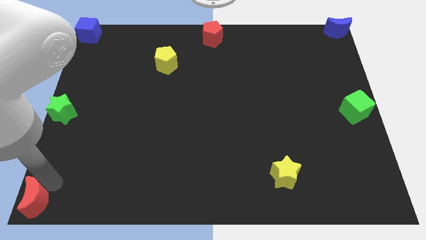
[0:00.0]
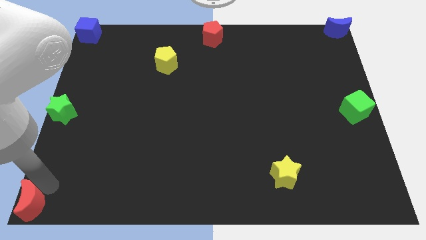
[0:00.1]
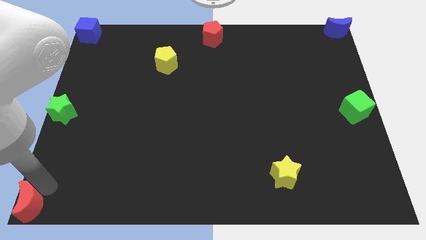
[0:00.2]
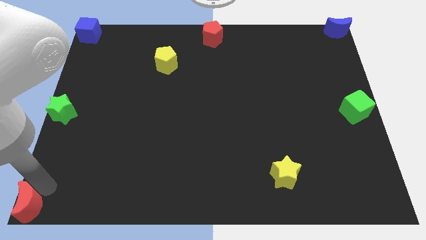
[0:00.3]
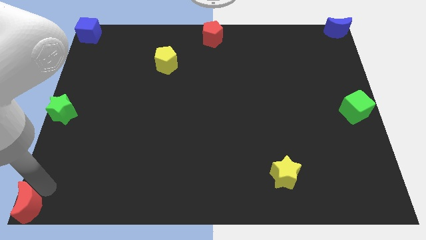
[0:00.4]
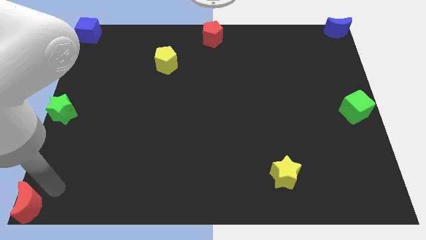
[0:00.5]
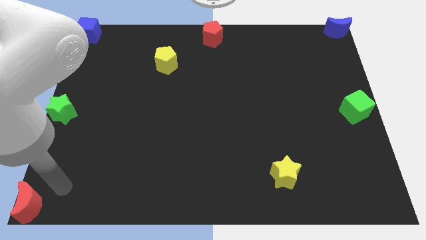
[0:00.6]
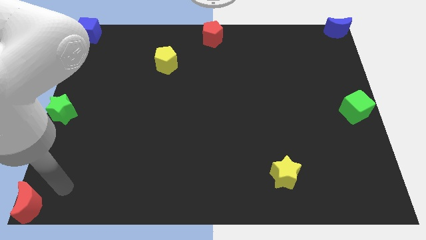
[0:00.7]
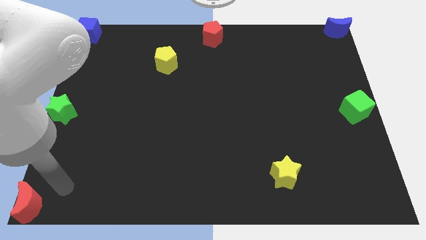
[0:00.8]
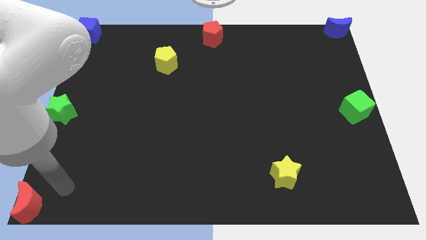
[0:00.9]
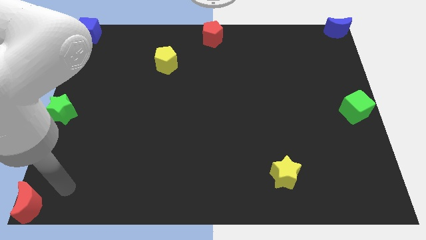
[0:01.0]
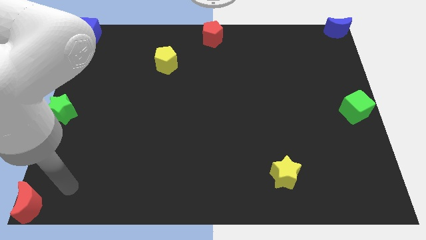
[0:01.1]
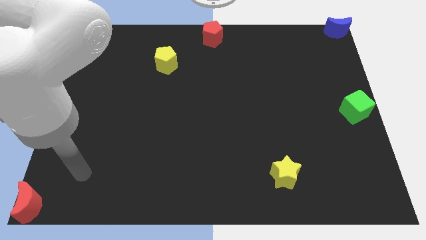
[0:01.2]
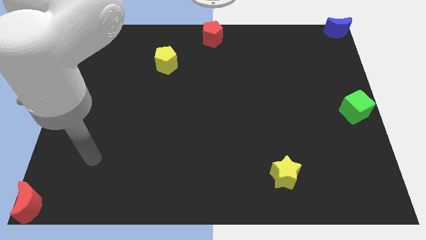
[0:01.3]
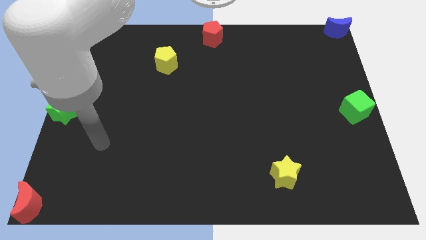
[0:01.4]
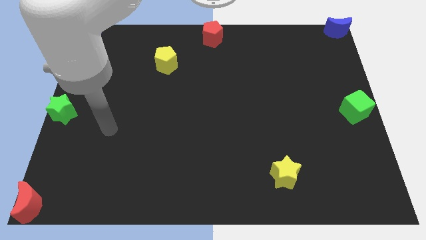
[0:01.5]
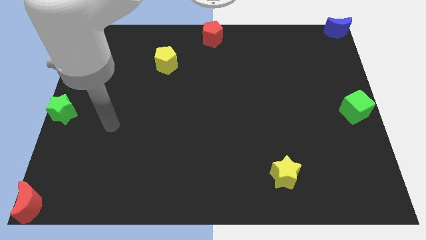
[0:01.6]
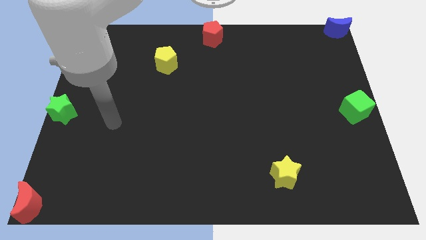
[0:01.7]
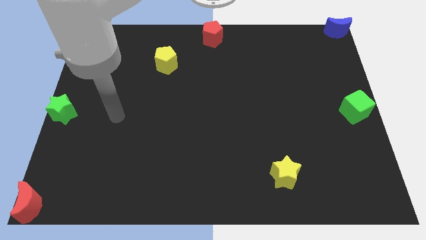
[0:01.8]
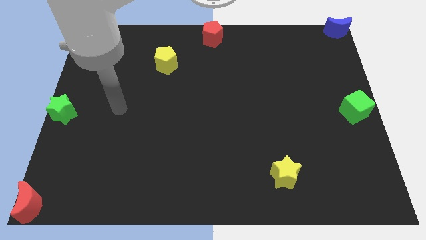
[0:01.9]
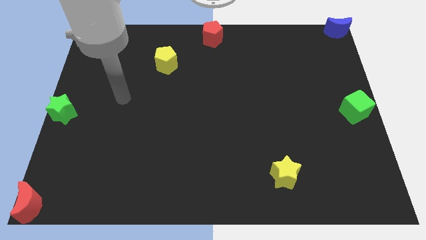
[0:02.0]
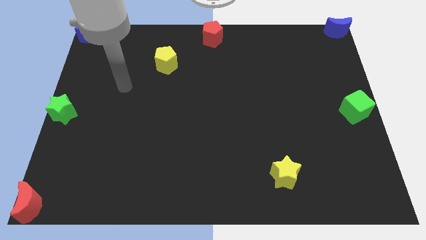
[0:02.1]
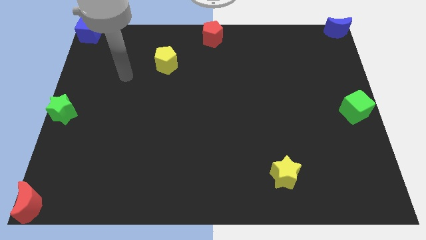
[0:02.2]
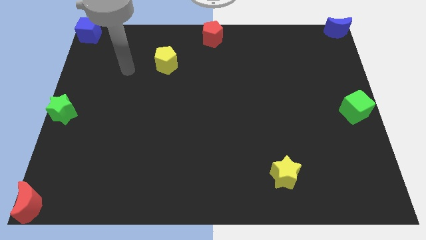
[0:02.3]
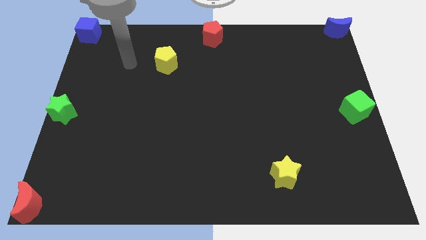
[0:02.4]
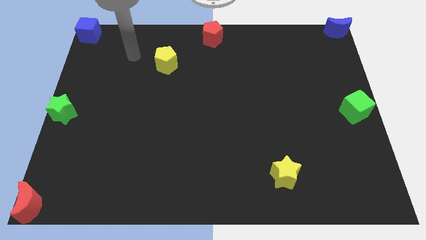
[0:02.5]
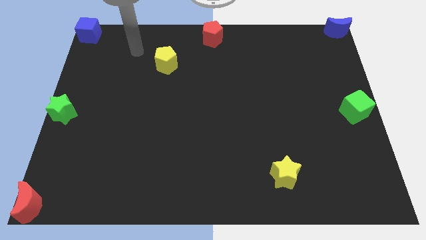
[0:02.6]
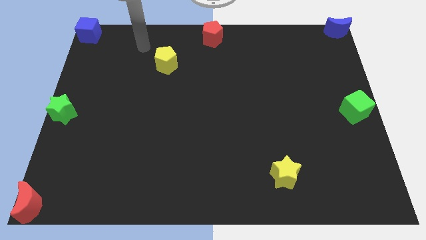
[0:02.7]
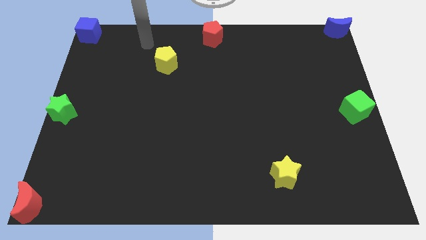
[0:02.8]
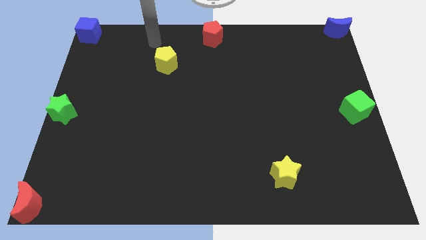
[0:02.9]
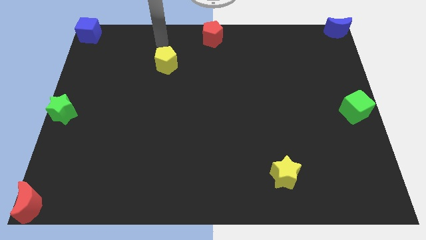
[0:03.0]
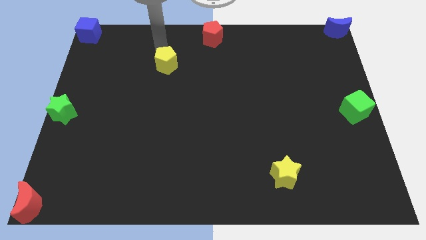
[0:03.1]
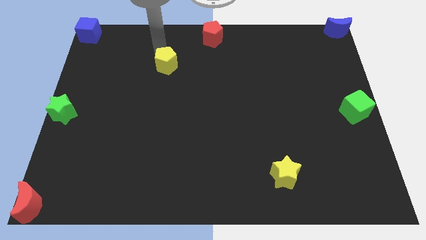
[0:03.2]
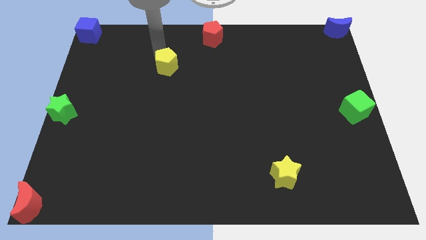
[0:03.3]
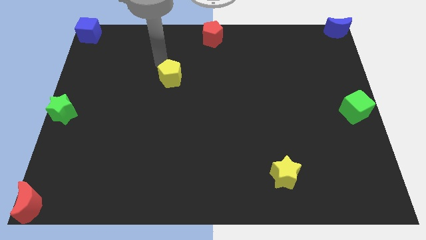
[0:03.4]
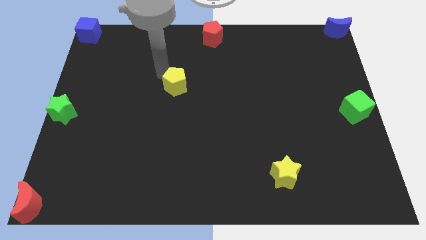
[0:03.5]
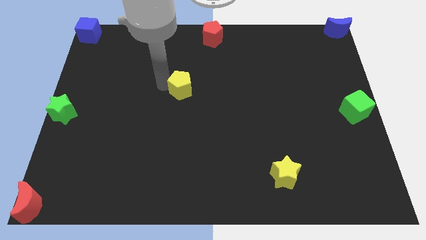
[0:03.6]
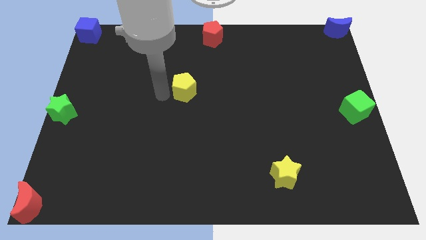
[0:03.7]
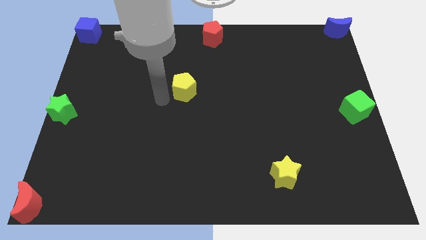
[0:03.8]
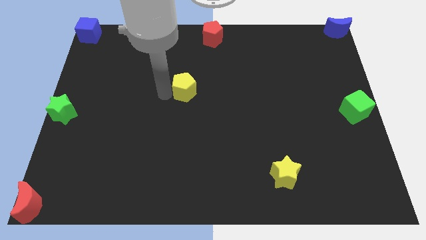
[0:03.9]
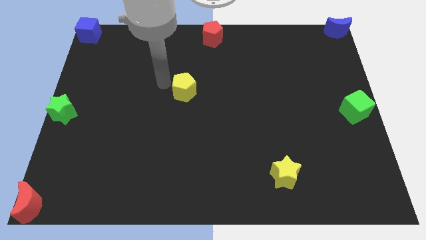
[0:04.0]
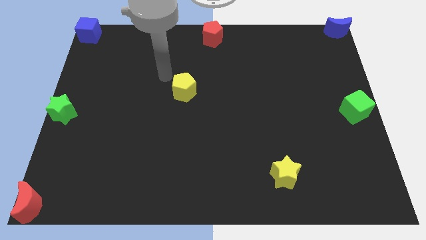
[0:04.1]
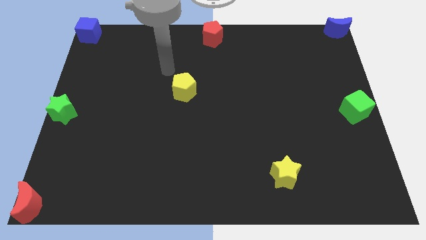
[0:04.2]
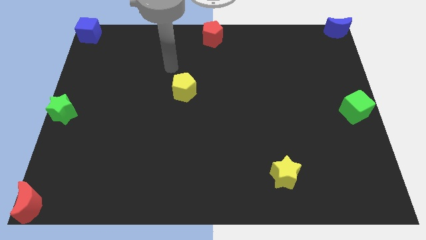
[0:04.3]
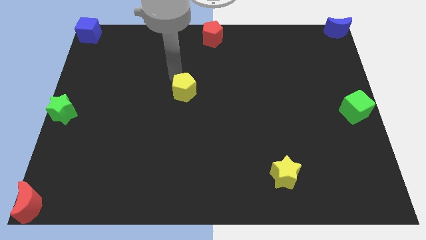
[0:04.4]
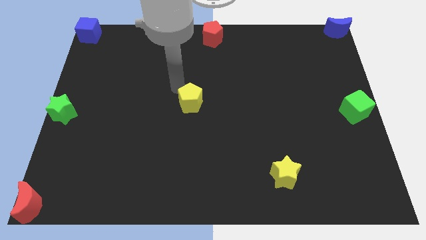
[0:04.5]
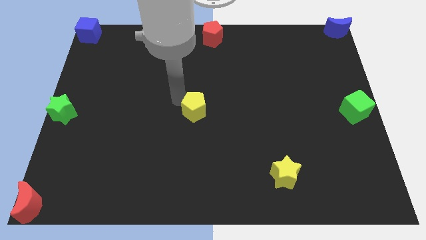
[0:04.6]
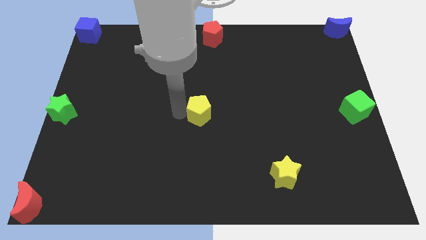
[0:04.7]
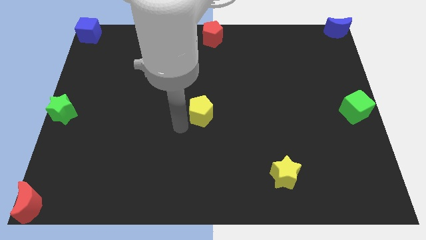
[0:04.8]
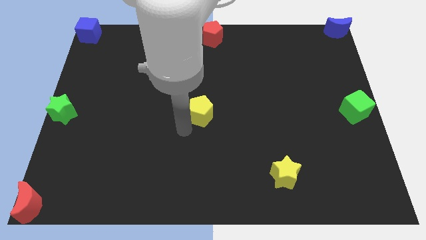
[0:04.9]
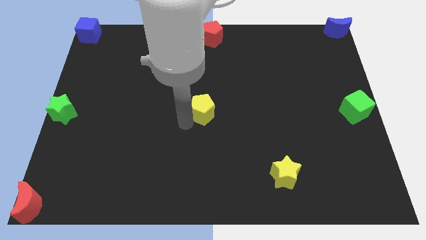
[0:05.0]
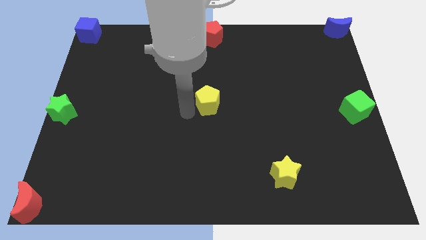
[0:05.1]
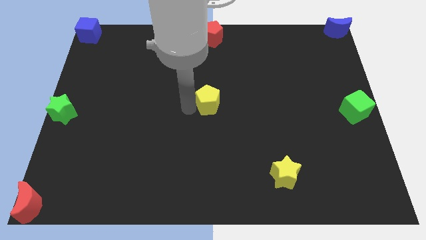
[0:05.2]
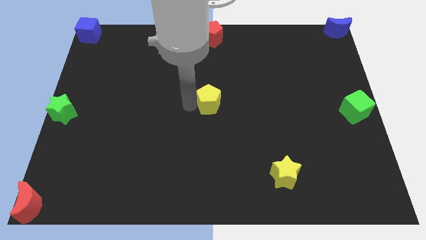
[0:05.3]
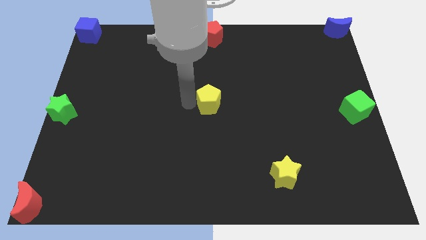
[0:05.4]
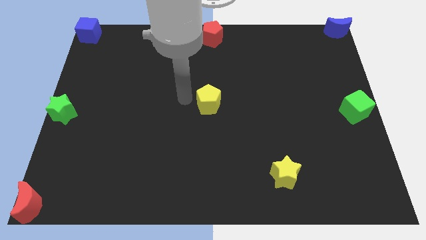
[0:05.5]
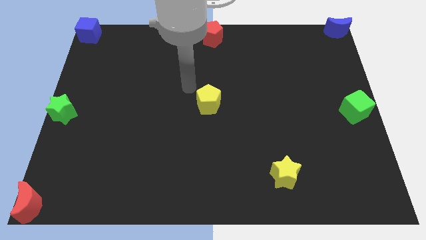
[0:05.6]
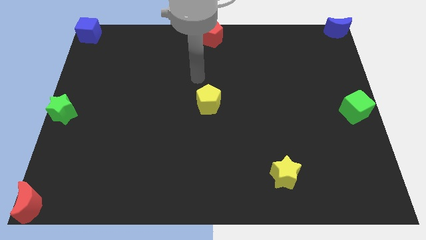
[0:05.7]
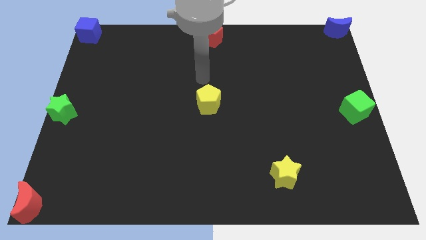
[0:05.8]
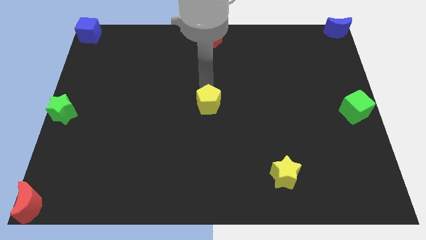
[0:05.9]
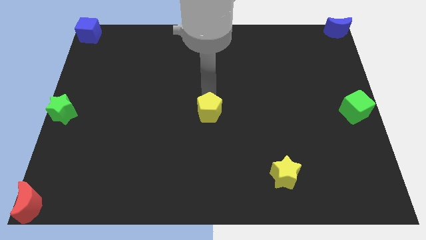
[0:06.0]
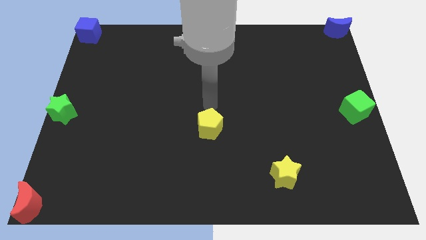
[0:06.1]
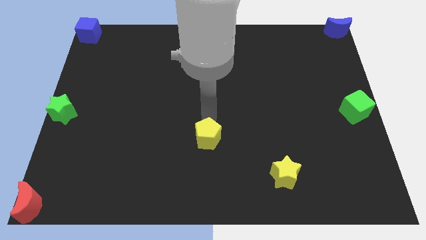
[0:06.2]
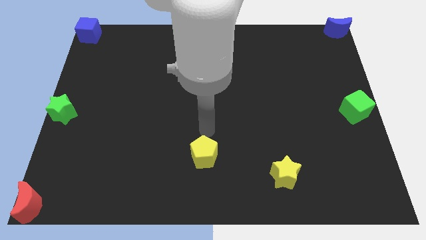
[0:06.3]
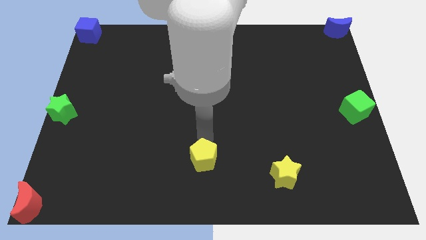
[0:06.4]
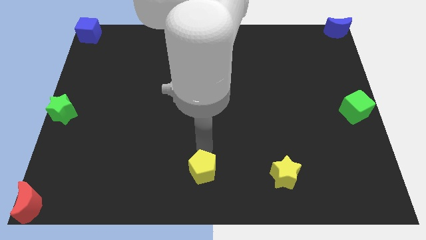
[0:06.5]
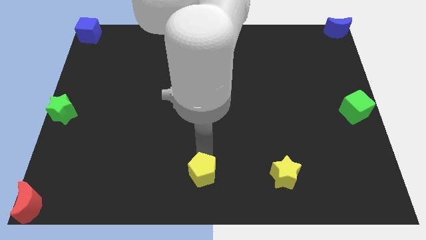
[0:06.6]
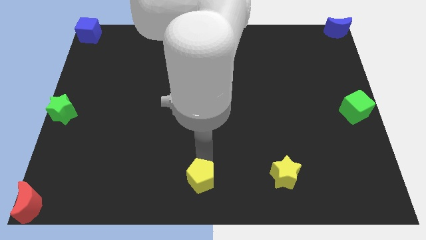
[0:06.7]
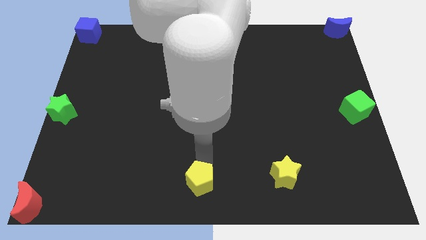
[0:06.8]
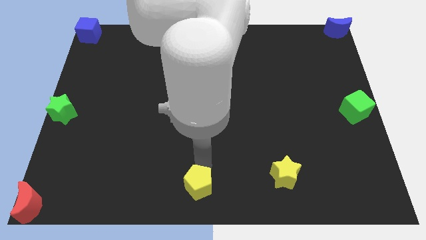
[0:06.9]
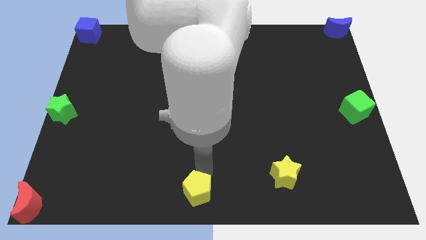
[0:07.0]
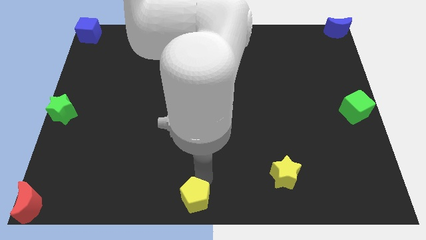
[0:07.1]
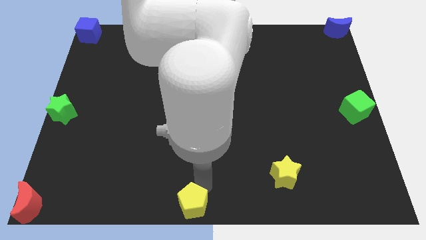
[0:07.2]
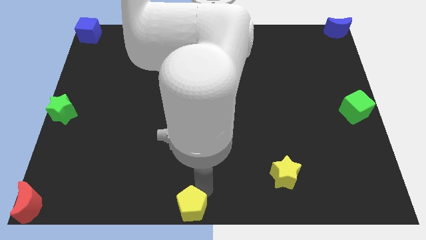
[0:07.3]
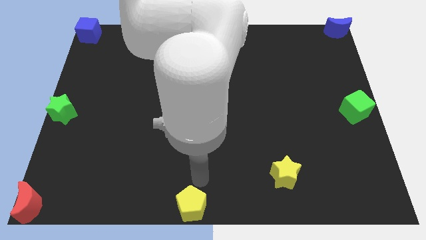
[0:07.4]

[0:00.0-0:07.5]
move the yellow pentagon towards the bottom center of the board

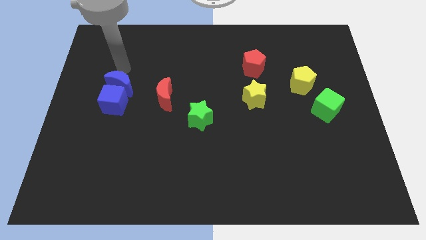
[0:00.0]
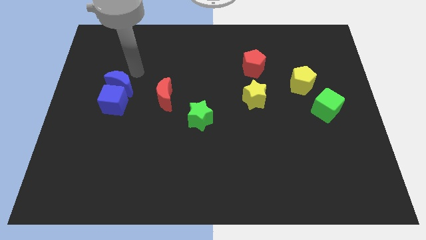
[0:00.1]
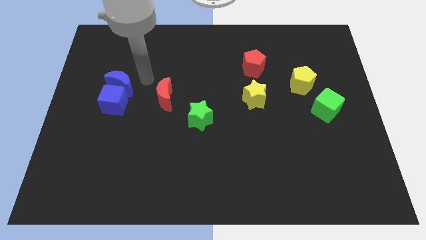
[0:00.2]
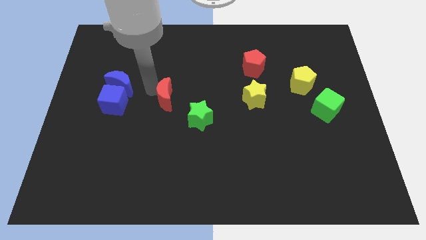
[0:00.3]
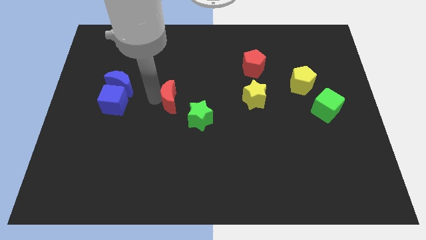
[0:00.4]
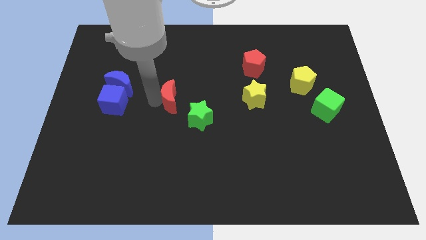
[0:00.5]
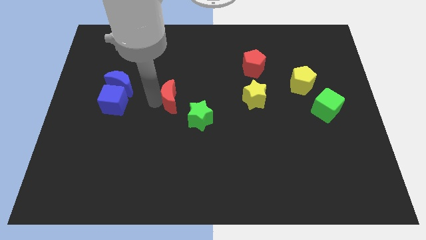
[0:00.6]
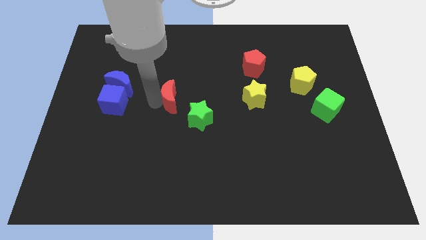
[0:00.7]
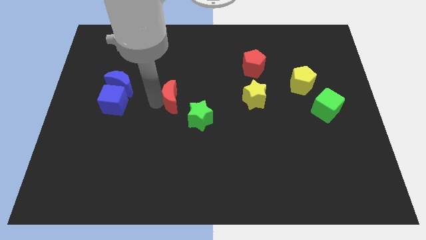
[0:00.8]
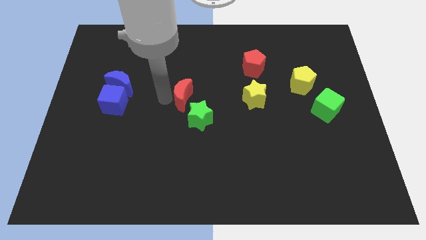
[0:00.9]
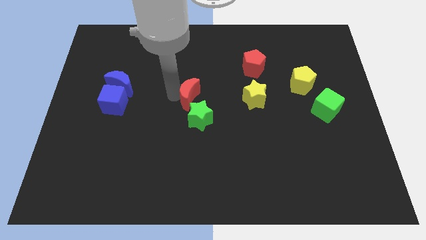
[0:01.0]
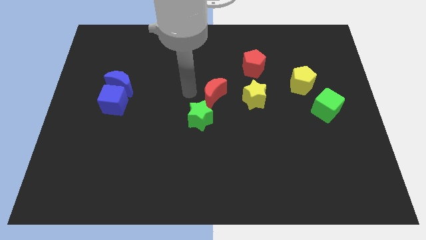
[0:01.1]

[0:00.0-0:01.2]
push red crescent to the top right side of the green star

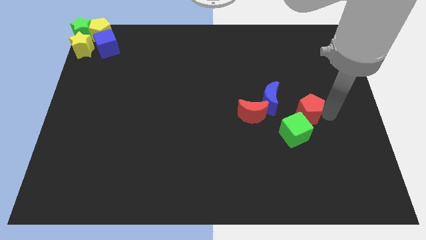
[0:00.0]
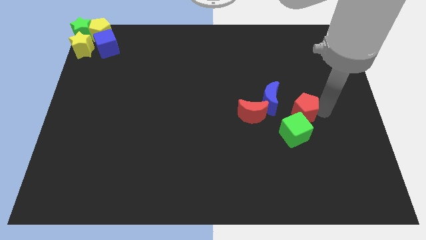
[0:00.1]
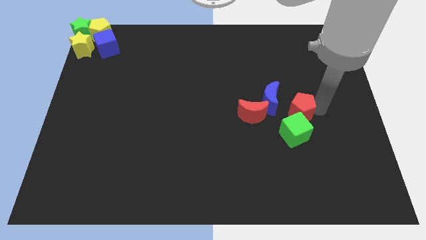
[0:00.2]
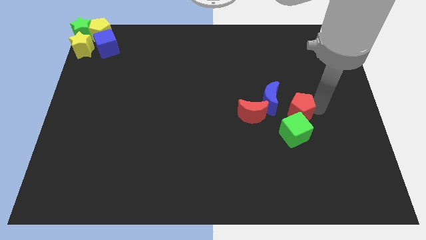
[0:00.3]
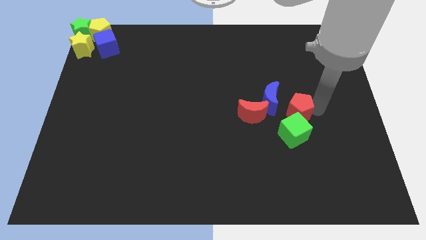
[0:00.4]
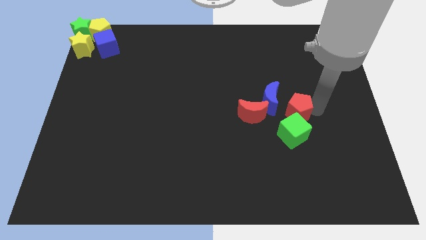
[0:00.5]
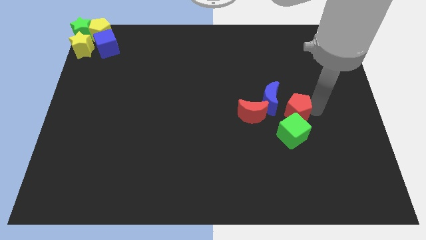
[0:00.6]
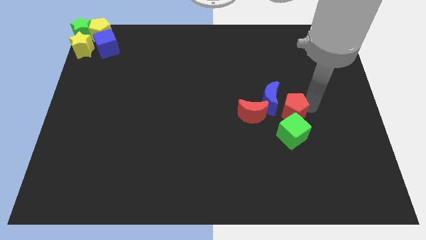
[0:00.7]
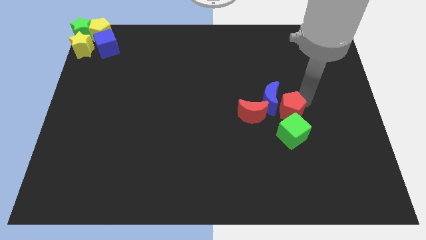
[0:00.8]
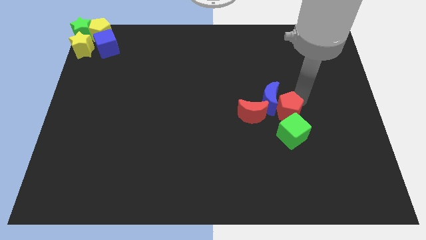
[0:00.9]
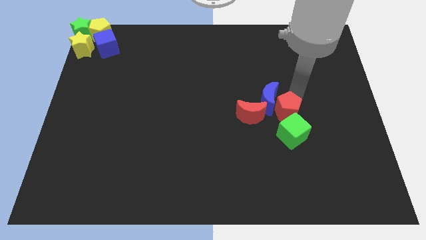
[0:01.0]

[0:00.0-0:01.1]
slide red pentagon into blue moon
